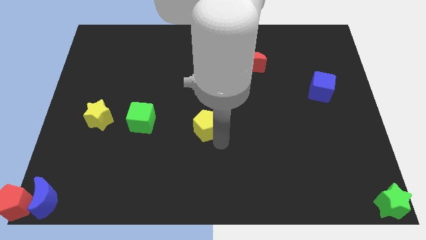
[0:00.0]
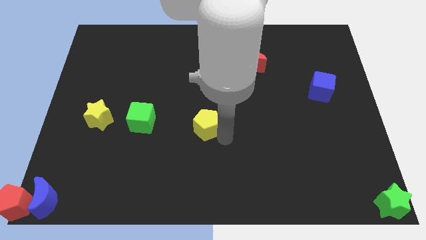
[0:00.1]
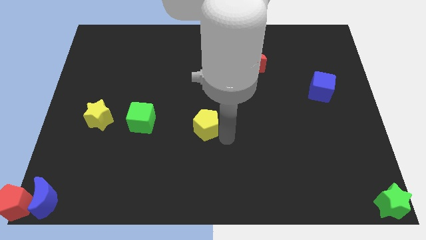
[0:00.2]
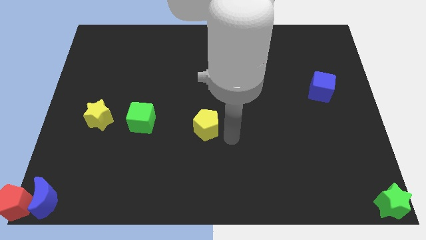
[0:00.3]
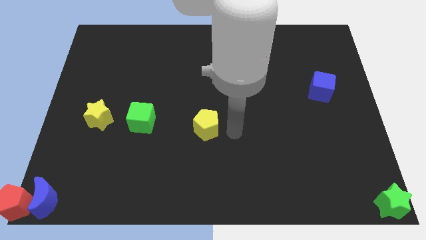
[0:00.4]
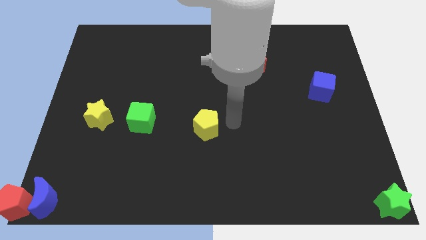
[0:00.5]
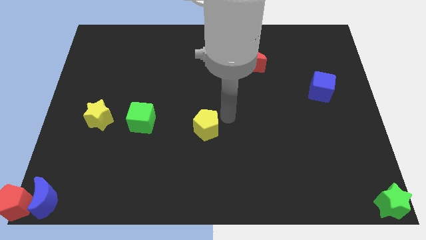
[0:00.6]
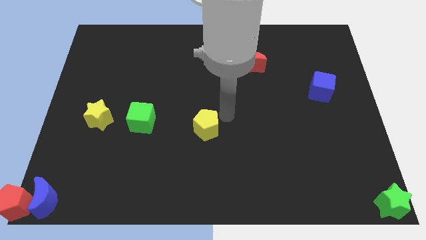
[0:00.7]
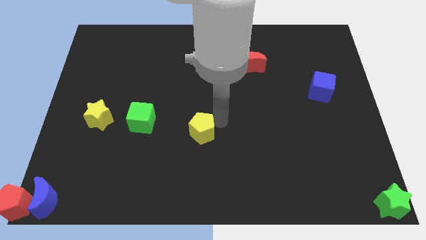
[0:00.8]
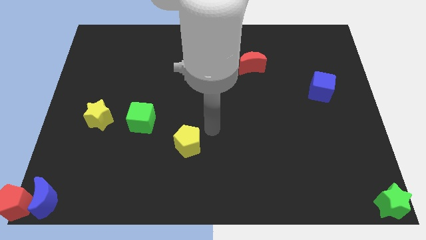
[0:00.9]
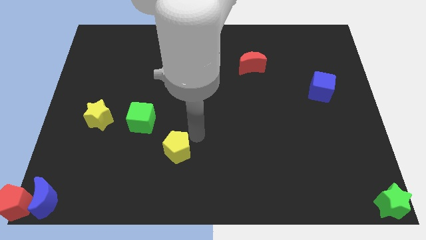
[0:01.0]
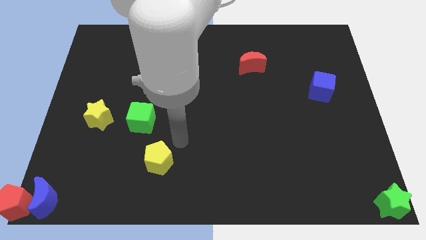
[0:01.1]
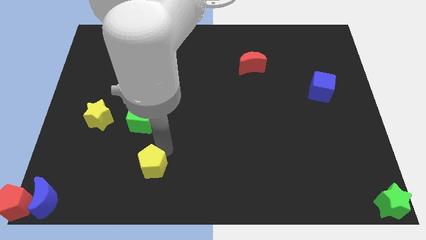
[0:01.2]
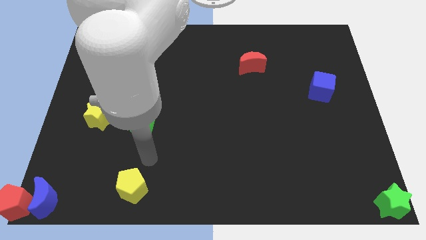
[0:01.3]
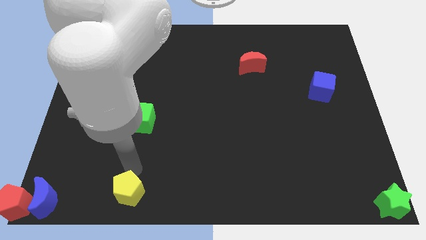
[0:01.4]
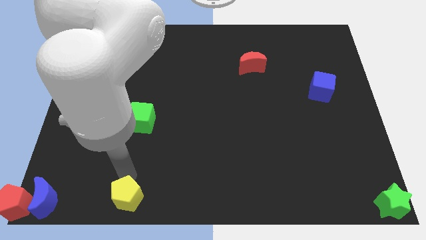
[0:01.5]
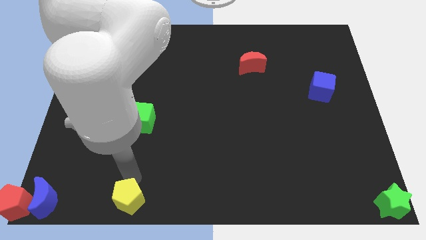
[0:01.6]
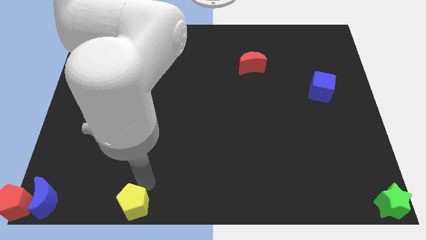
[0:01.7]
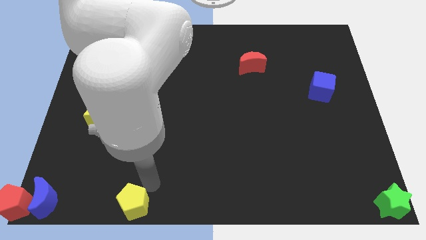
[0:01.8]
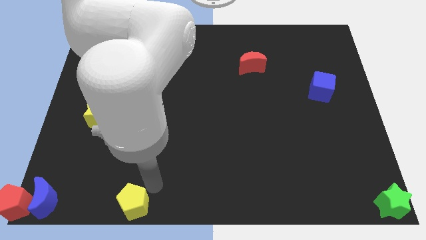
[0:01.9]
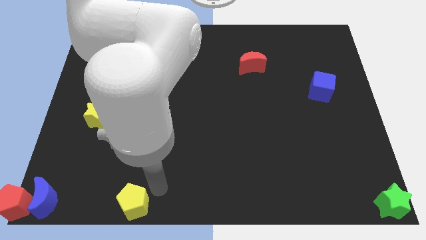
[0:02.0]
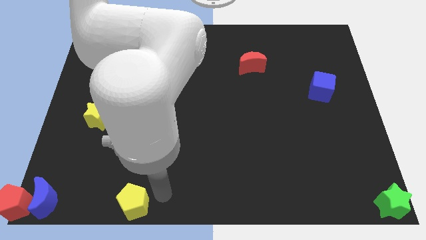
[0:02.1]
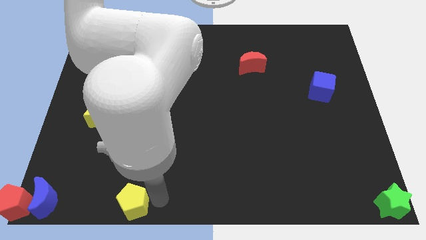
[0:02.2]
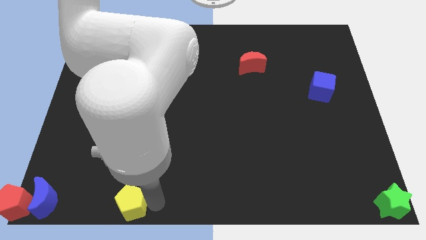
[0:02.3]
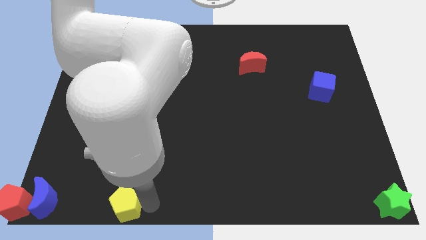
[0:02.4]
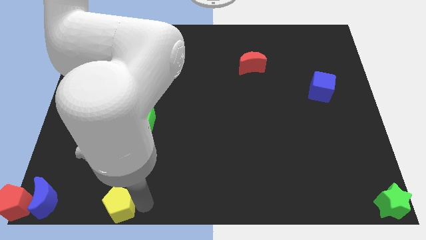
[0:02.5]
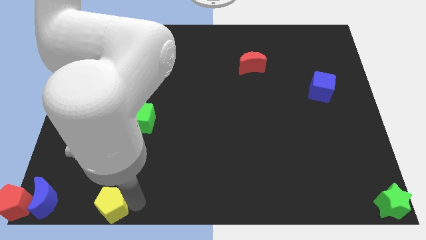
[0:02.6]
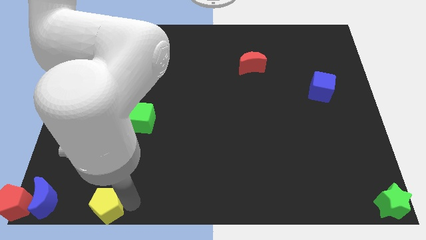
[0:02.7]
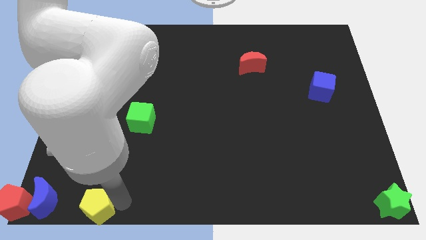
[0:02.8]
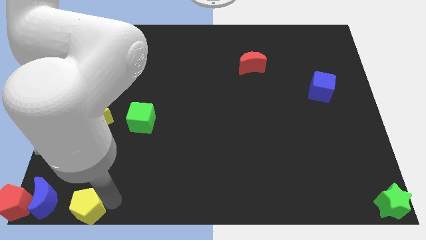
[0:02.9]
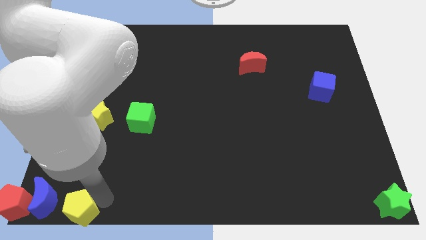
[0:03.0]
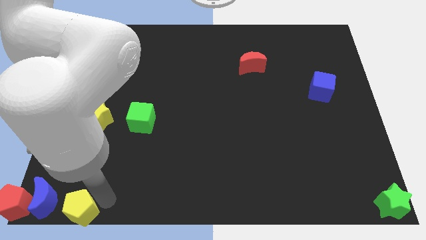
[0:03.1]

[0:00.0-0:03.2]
move the yellow pentagon close to the blue moon

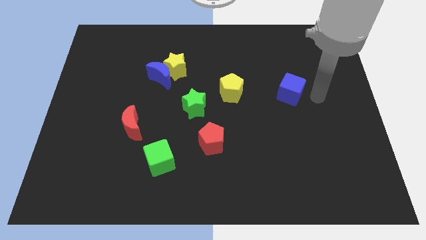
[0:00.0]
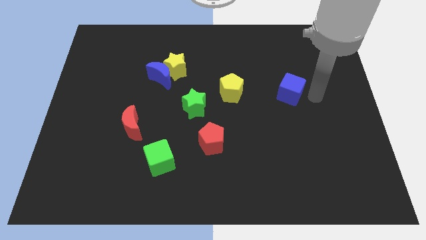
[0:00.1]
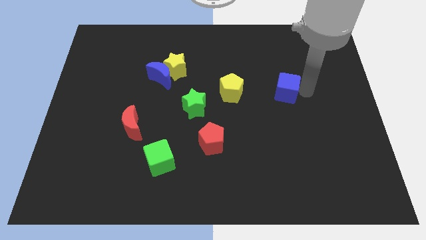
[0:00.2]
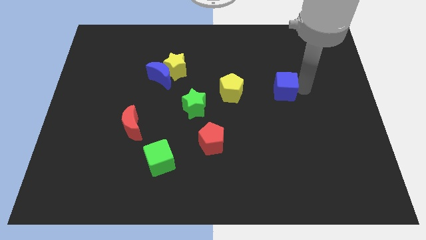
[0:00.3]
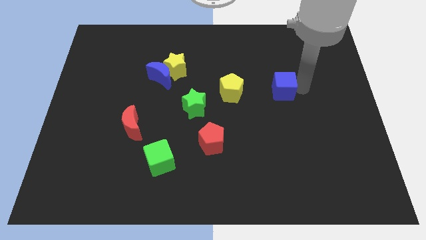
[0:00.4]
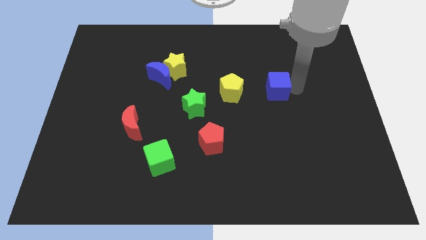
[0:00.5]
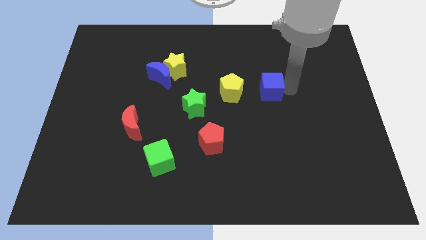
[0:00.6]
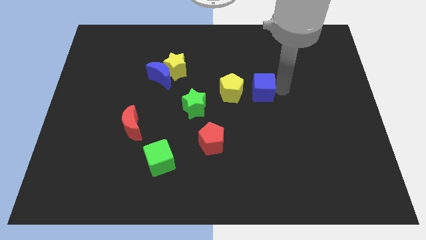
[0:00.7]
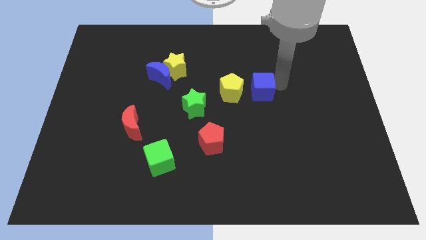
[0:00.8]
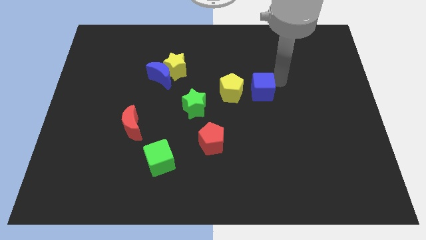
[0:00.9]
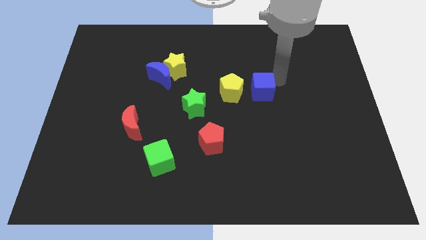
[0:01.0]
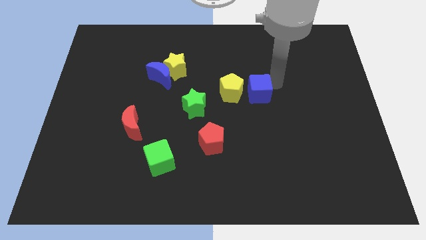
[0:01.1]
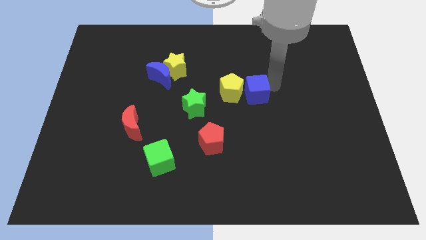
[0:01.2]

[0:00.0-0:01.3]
move the blue cube close to the right side of the yellow pentagon

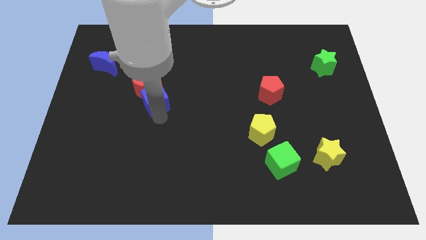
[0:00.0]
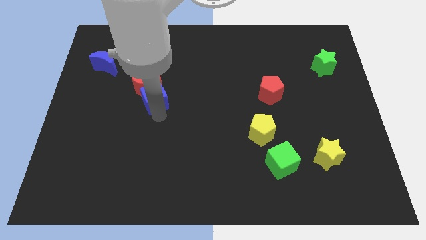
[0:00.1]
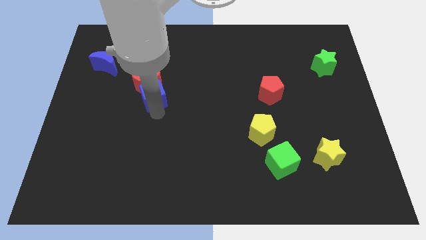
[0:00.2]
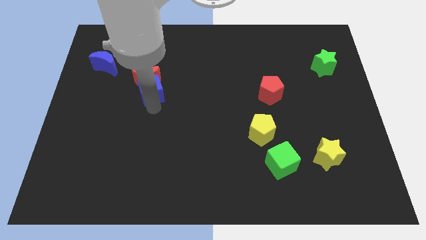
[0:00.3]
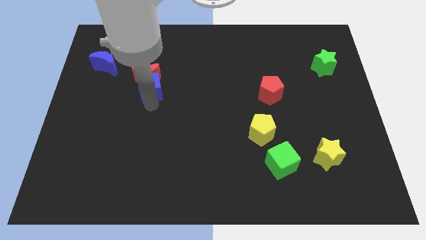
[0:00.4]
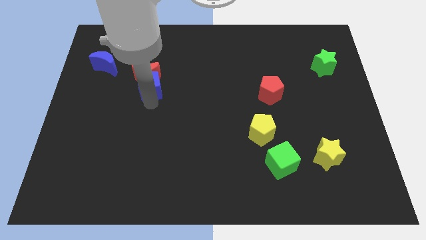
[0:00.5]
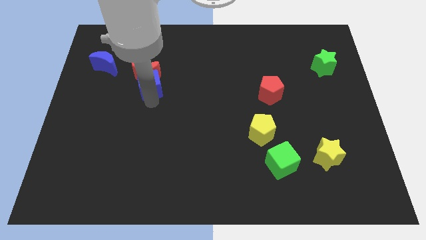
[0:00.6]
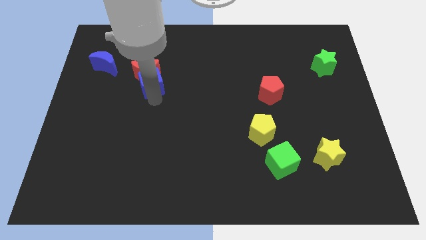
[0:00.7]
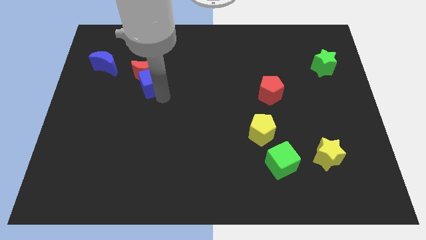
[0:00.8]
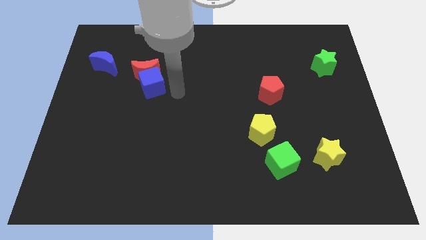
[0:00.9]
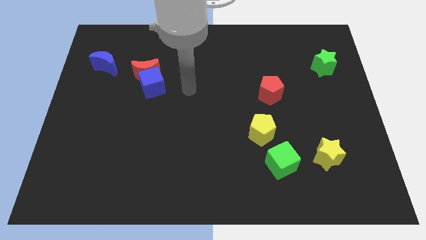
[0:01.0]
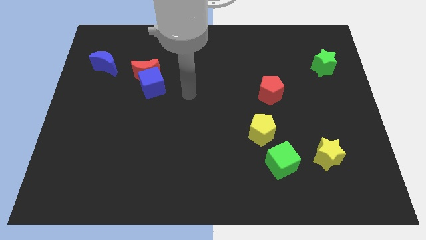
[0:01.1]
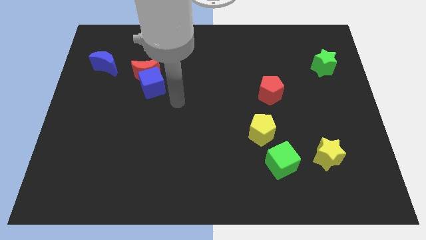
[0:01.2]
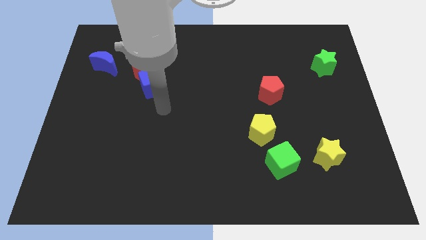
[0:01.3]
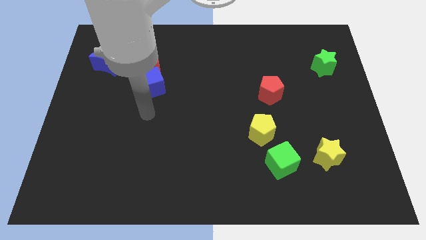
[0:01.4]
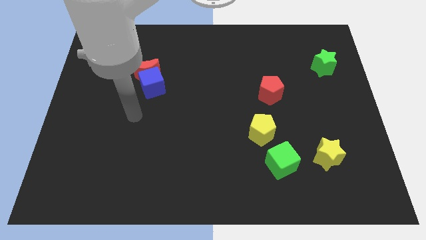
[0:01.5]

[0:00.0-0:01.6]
move the red moon along with the blue cube to the right of the blue moon

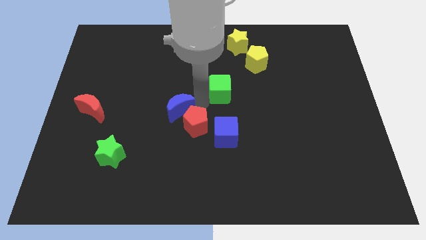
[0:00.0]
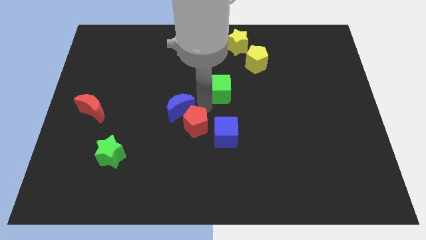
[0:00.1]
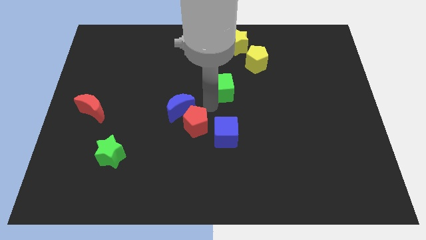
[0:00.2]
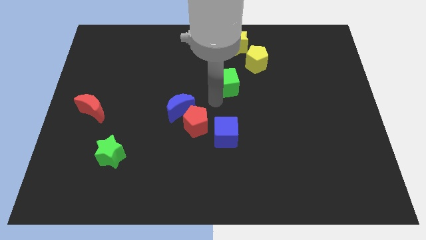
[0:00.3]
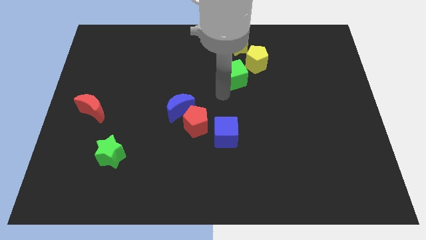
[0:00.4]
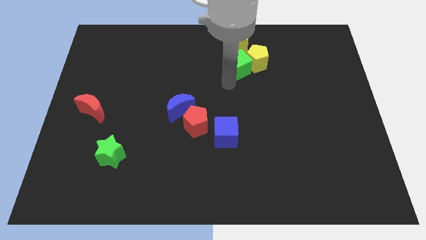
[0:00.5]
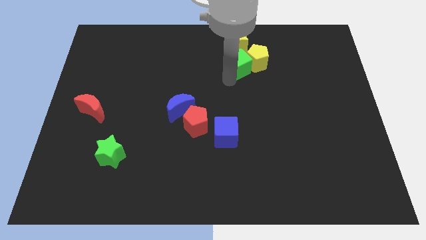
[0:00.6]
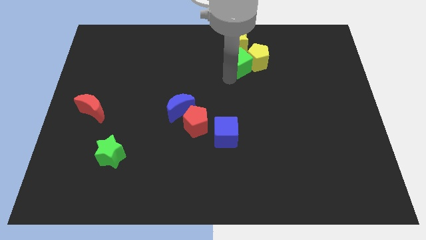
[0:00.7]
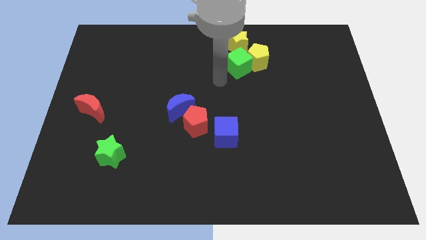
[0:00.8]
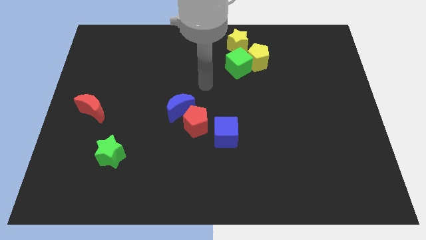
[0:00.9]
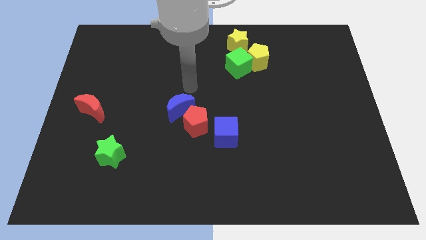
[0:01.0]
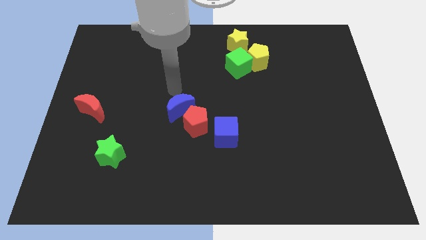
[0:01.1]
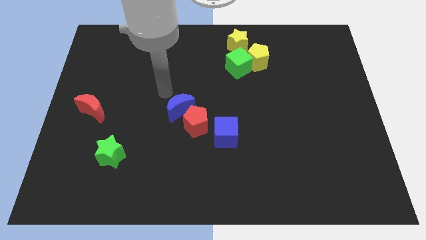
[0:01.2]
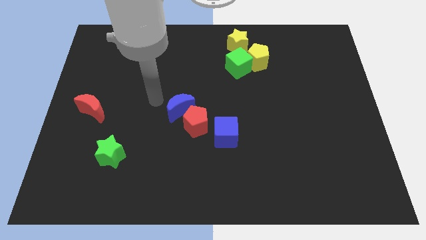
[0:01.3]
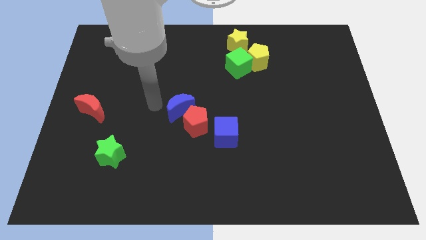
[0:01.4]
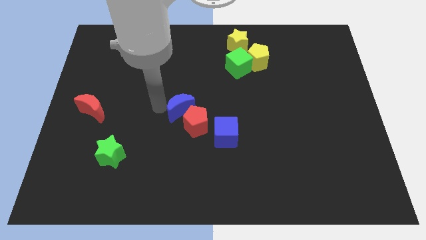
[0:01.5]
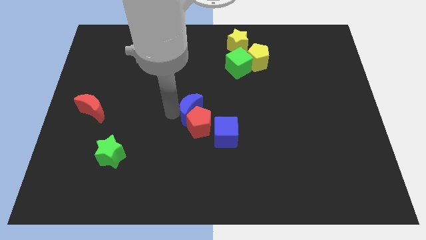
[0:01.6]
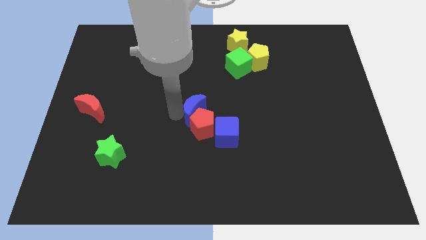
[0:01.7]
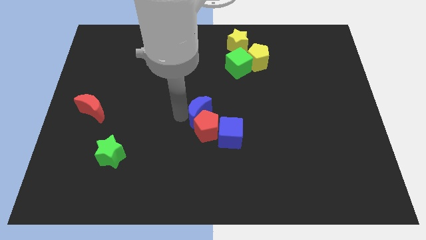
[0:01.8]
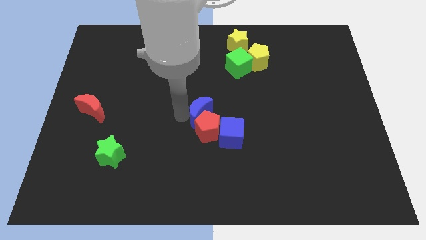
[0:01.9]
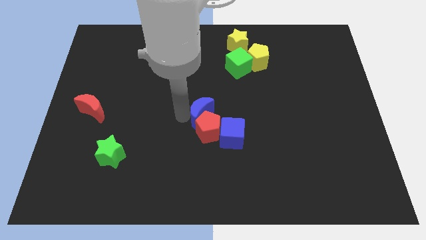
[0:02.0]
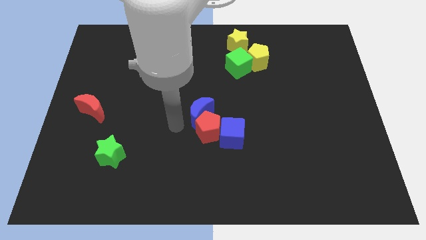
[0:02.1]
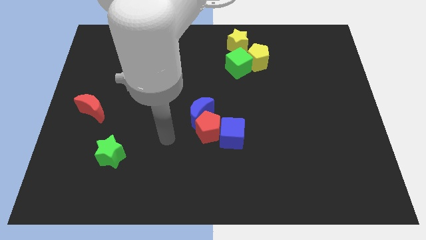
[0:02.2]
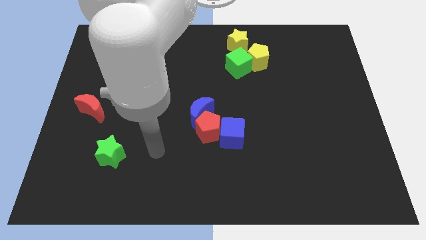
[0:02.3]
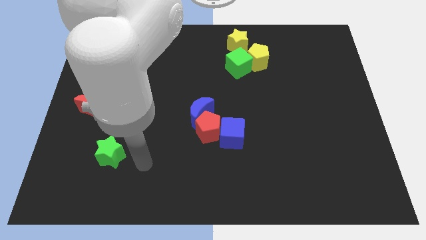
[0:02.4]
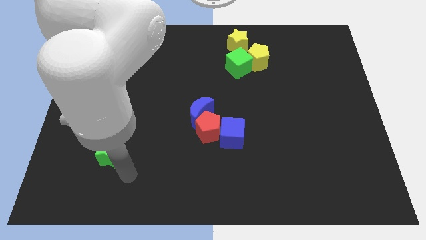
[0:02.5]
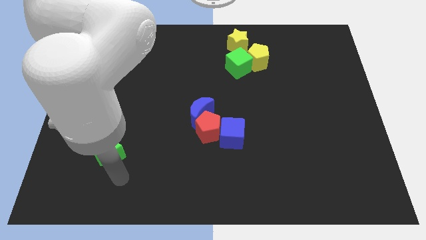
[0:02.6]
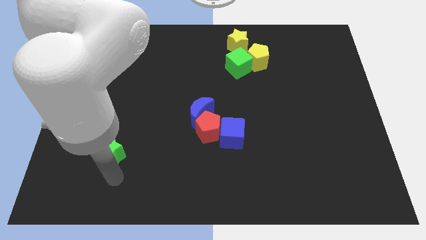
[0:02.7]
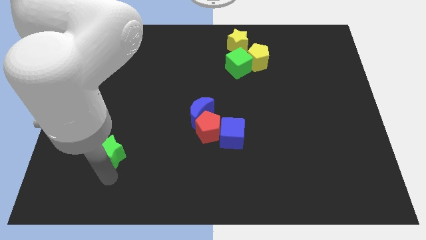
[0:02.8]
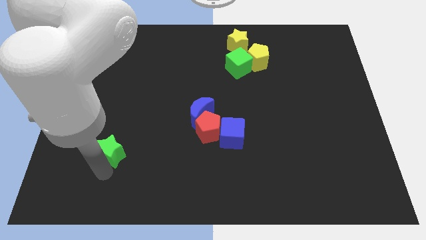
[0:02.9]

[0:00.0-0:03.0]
push the green cube into the yellow pentagon

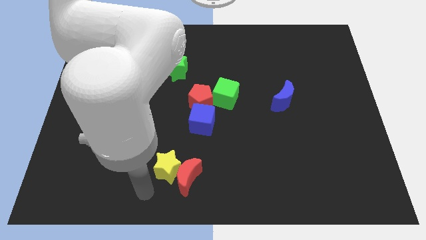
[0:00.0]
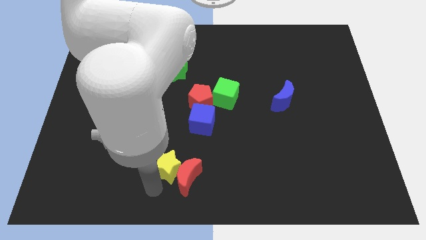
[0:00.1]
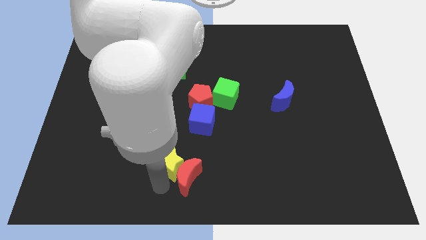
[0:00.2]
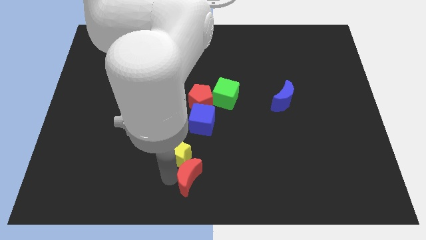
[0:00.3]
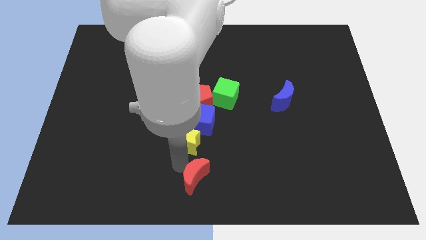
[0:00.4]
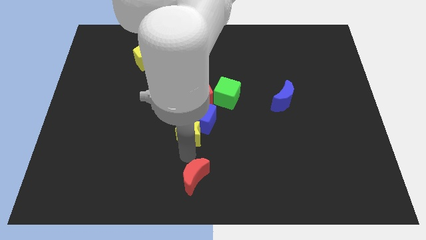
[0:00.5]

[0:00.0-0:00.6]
push the yellow star into the blue cube
